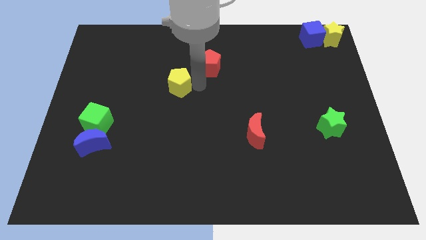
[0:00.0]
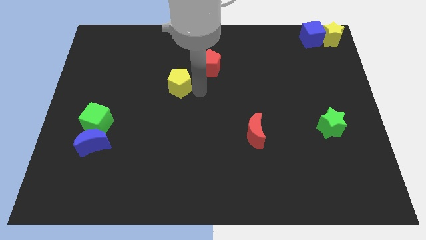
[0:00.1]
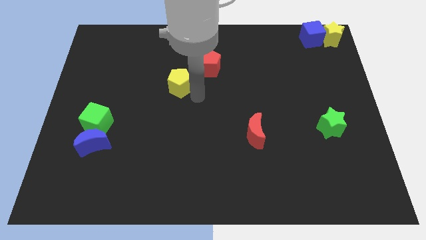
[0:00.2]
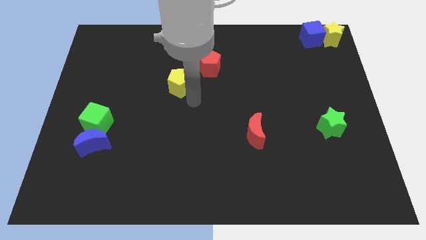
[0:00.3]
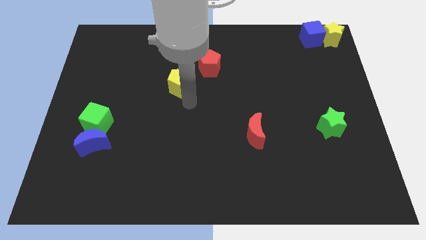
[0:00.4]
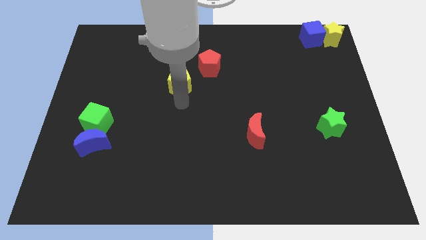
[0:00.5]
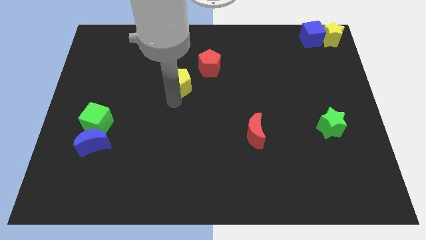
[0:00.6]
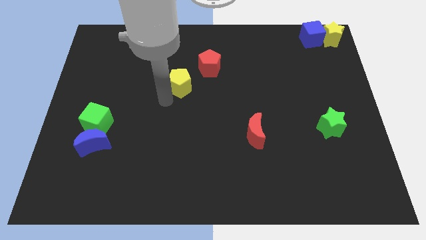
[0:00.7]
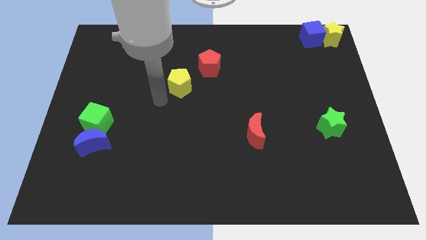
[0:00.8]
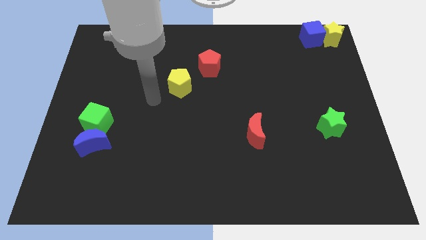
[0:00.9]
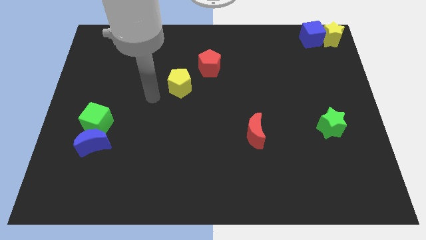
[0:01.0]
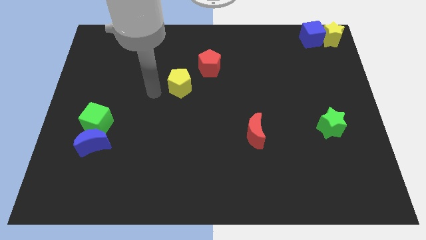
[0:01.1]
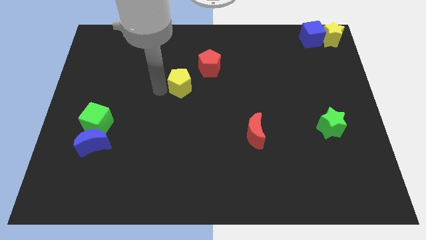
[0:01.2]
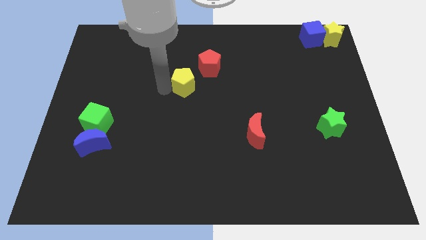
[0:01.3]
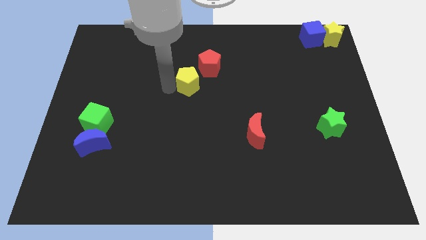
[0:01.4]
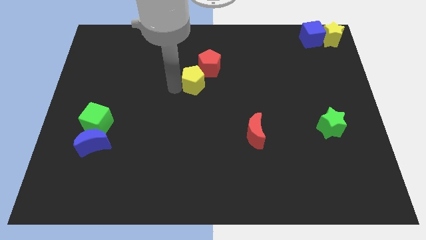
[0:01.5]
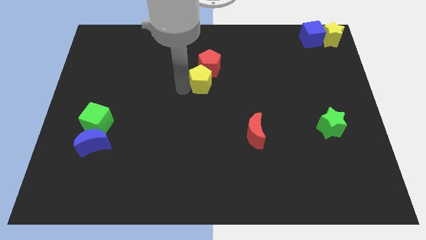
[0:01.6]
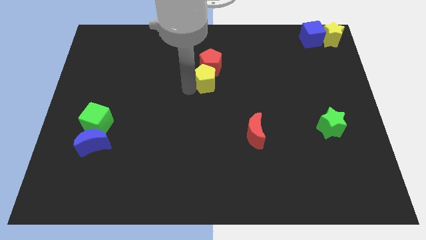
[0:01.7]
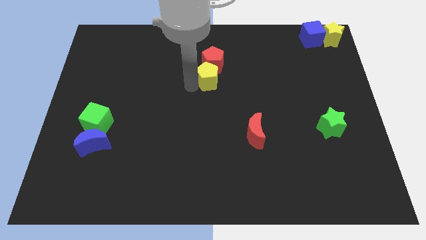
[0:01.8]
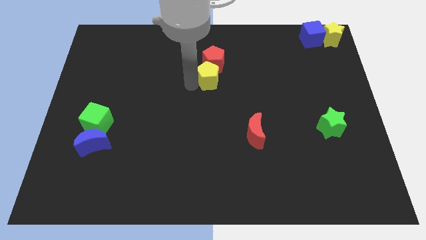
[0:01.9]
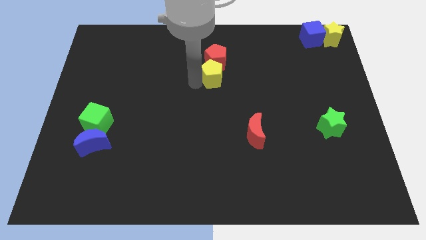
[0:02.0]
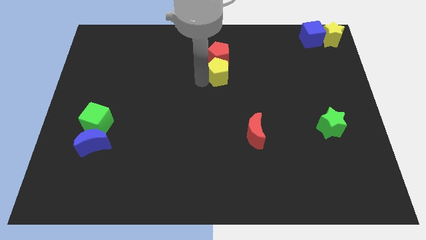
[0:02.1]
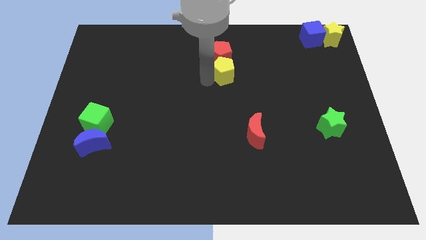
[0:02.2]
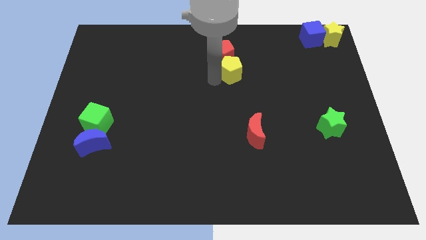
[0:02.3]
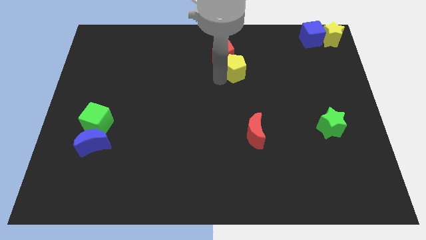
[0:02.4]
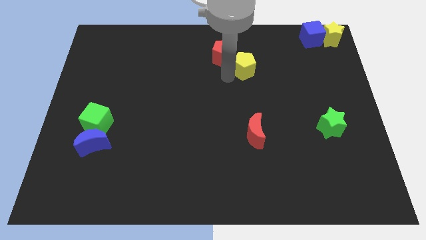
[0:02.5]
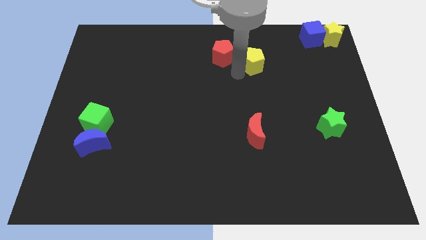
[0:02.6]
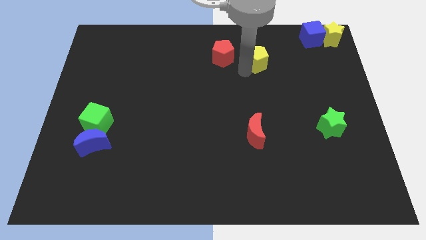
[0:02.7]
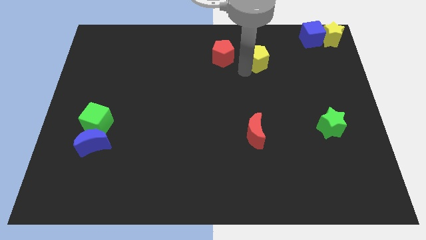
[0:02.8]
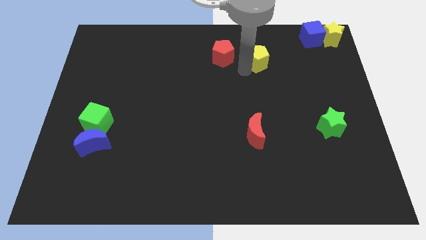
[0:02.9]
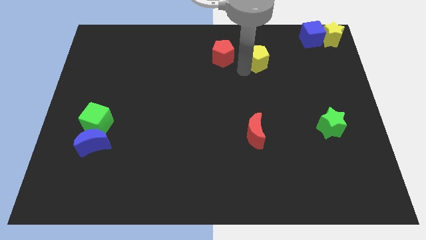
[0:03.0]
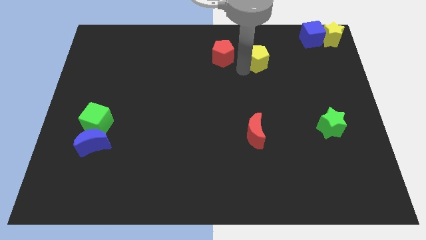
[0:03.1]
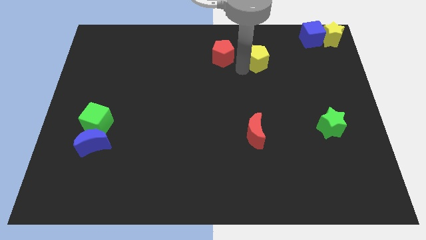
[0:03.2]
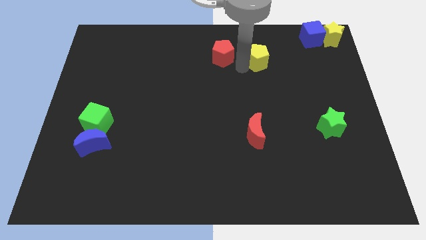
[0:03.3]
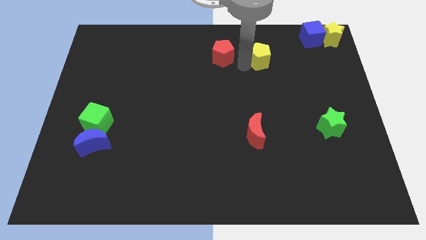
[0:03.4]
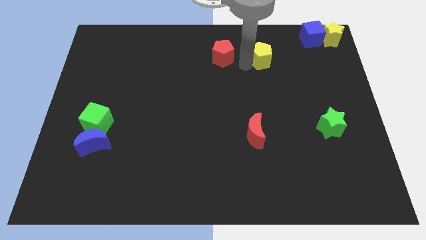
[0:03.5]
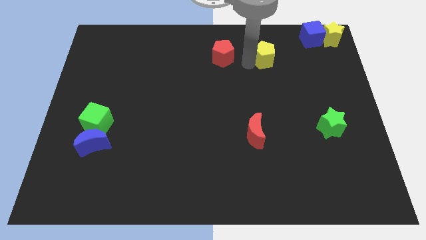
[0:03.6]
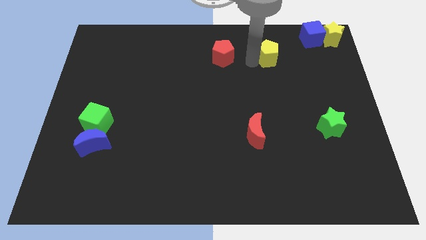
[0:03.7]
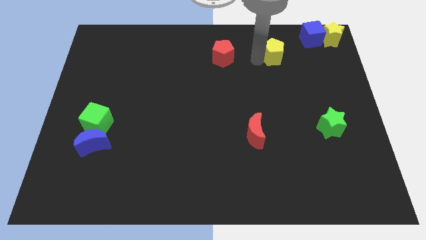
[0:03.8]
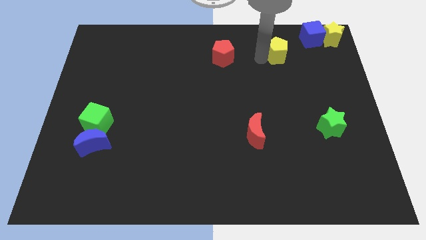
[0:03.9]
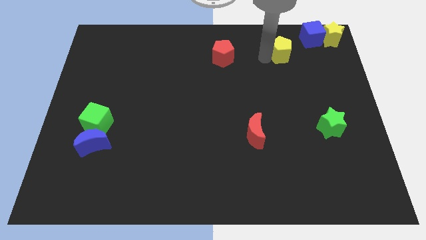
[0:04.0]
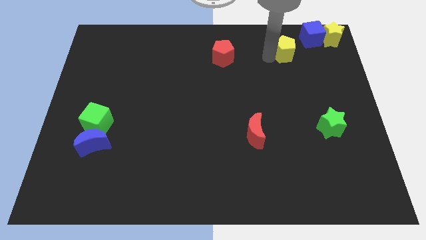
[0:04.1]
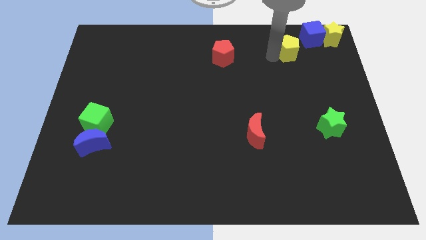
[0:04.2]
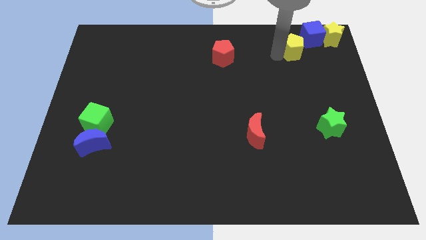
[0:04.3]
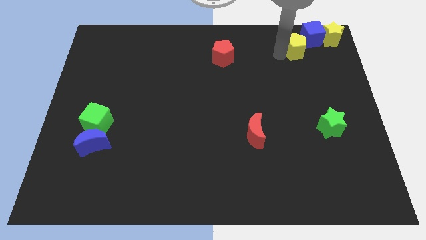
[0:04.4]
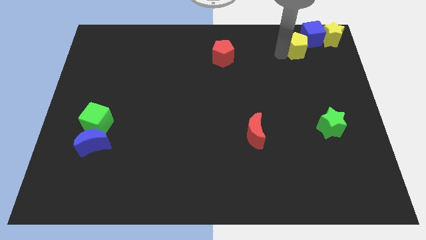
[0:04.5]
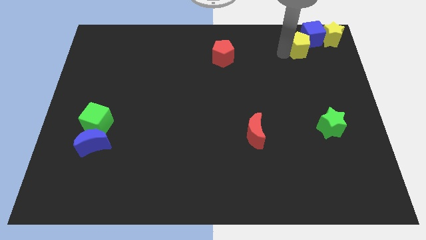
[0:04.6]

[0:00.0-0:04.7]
move the yellow pentagon close to the blocks

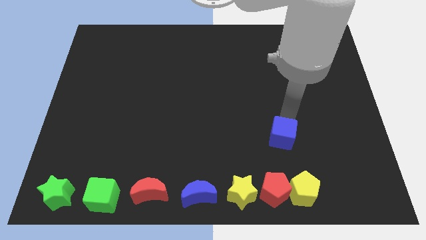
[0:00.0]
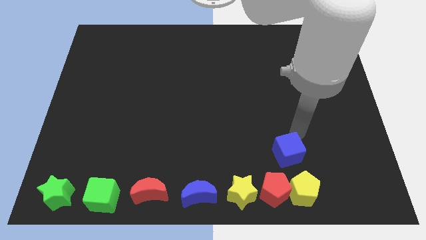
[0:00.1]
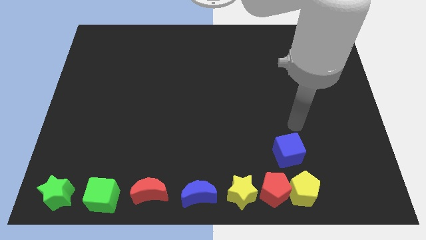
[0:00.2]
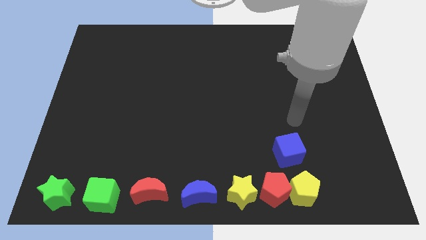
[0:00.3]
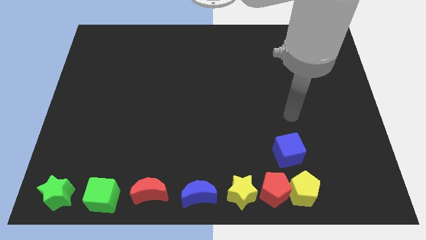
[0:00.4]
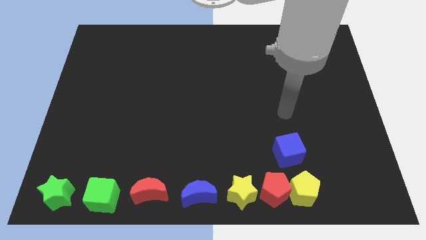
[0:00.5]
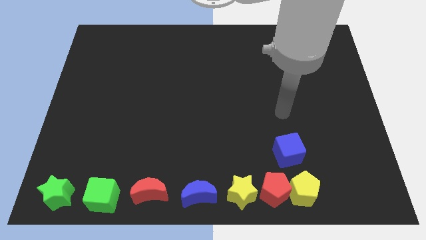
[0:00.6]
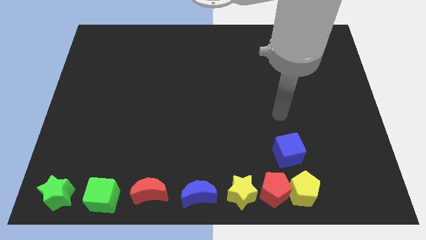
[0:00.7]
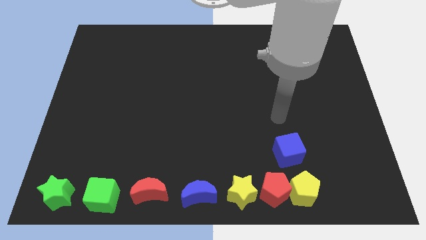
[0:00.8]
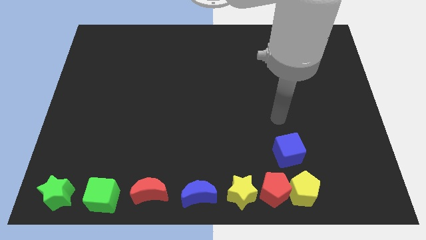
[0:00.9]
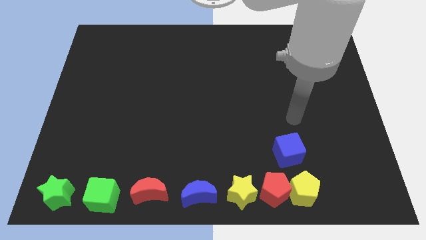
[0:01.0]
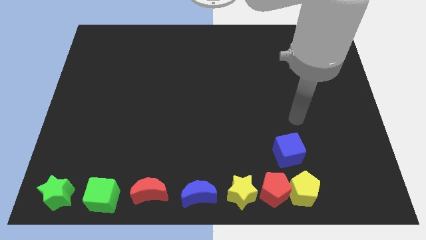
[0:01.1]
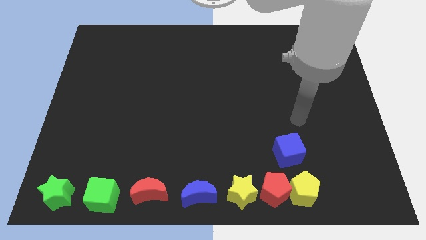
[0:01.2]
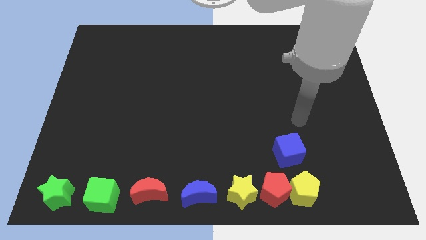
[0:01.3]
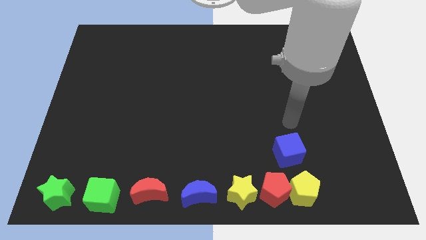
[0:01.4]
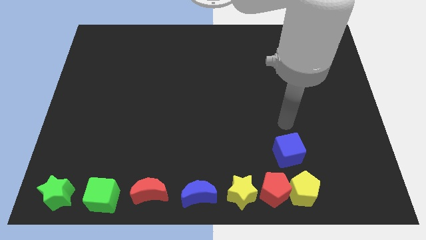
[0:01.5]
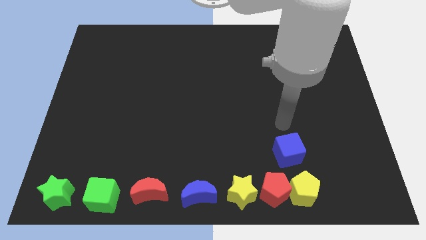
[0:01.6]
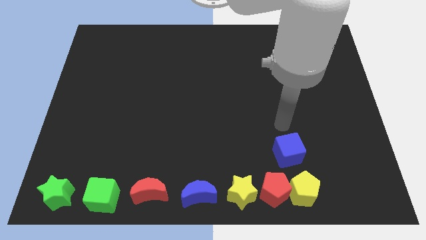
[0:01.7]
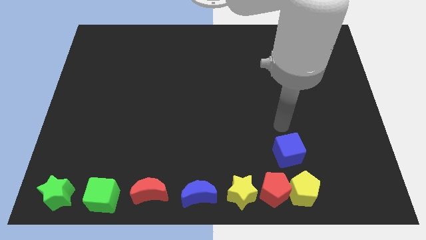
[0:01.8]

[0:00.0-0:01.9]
place the blue cube above the yellow pentagon

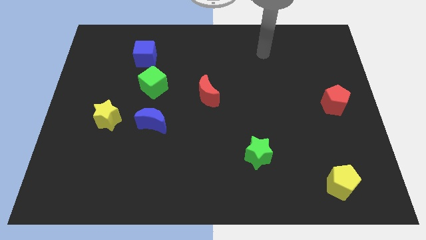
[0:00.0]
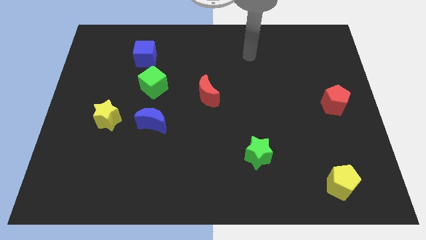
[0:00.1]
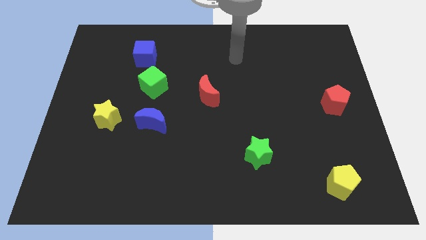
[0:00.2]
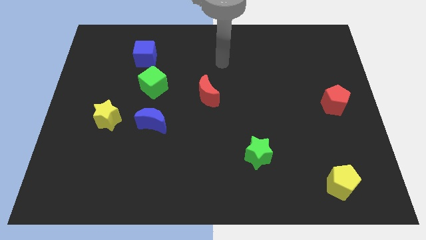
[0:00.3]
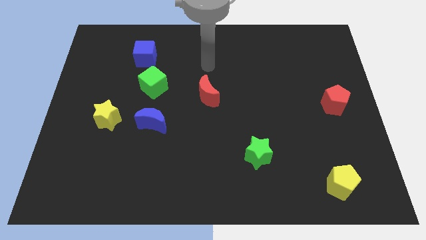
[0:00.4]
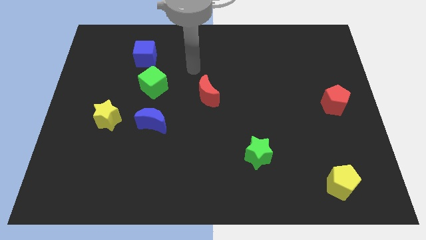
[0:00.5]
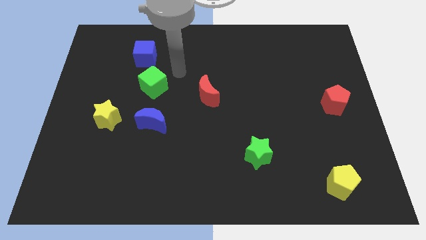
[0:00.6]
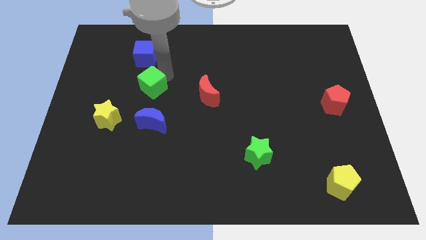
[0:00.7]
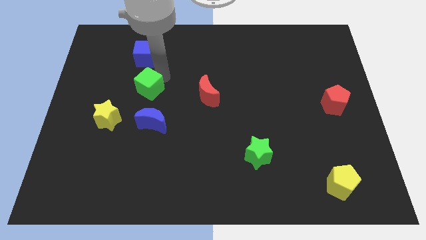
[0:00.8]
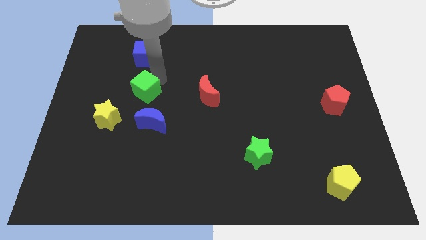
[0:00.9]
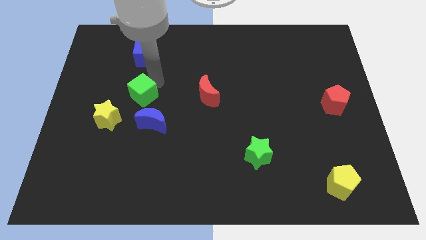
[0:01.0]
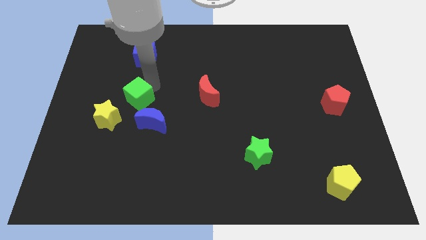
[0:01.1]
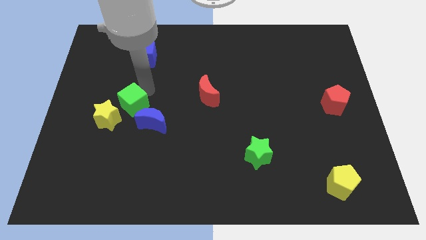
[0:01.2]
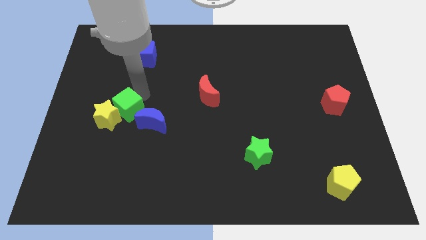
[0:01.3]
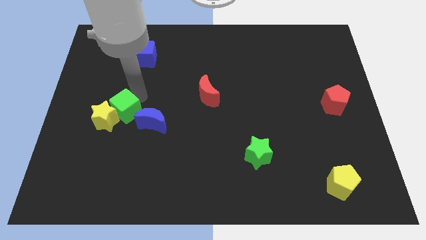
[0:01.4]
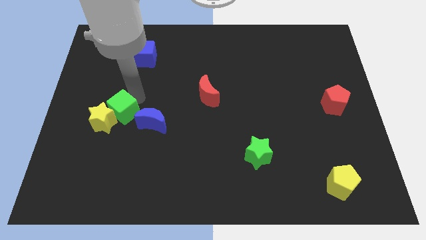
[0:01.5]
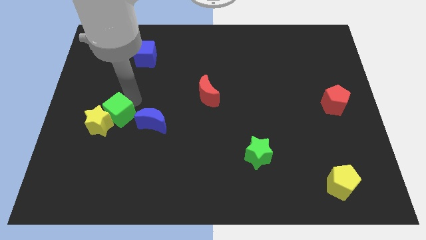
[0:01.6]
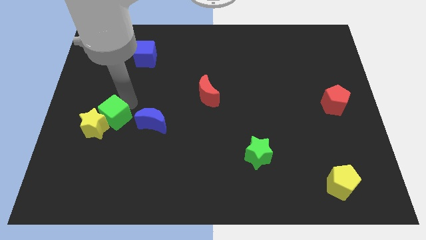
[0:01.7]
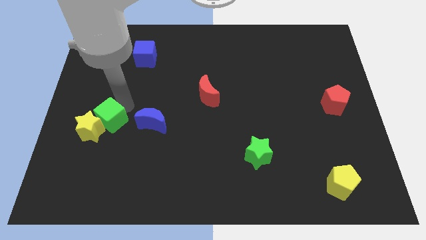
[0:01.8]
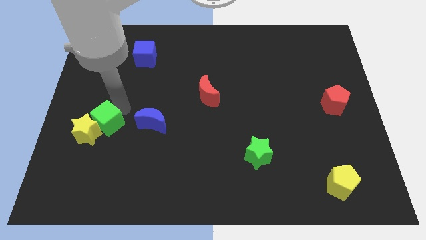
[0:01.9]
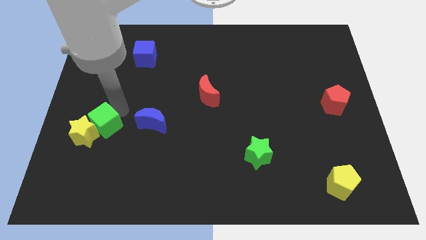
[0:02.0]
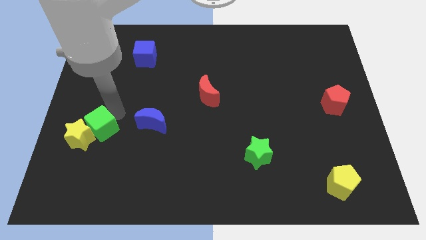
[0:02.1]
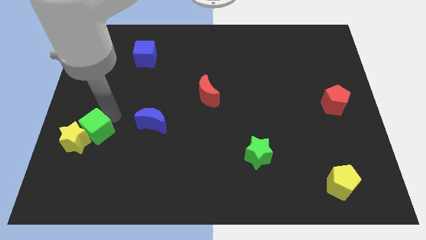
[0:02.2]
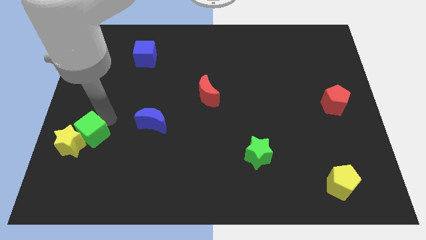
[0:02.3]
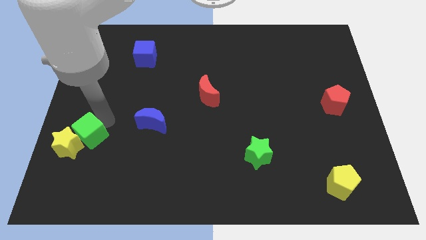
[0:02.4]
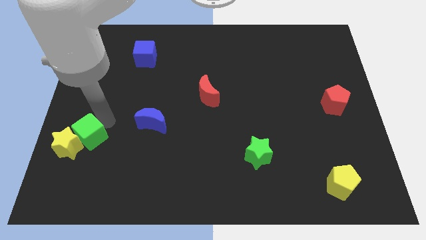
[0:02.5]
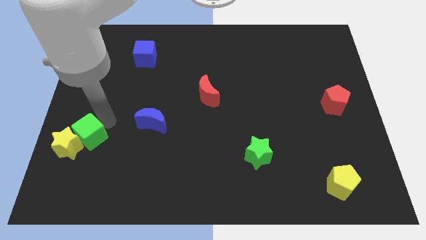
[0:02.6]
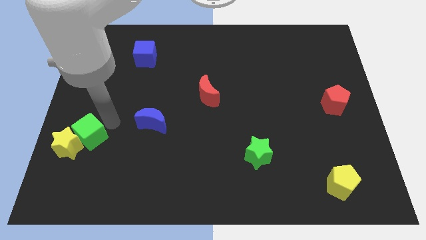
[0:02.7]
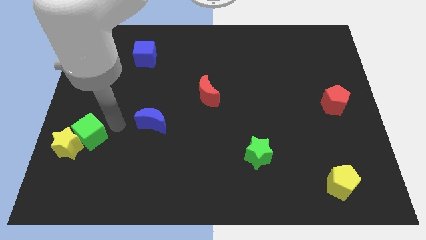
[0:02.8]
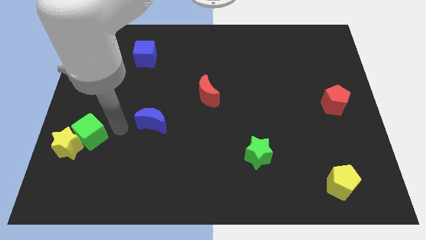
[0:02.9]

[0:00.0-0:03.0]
push the green cube into the yellow star
